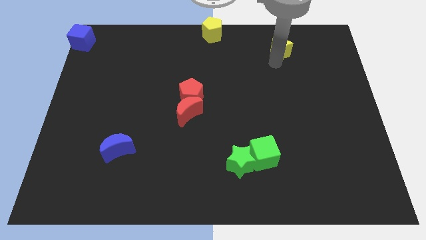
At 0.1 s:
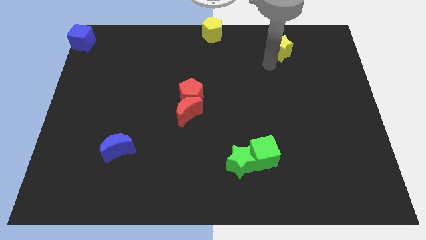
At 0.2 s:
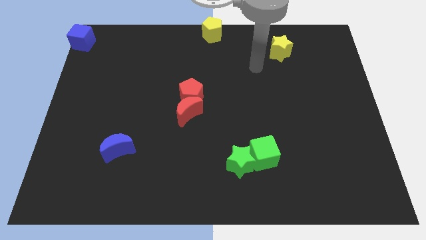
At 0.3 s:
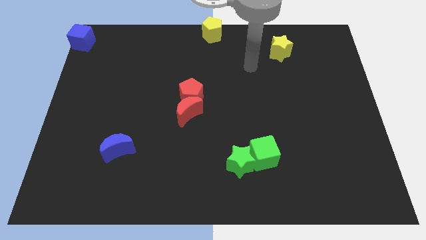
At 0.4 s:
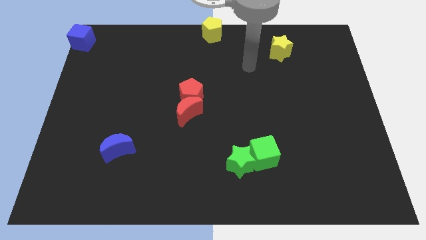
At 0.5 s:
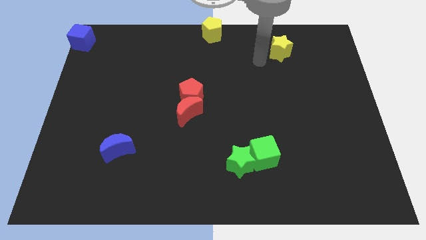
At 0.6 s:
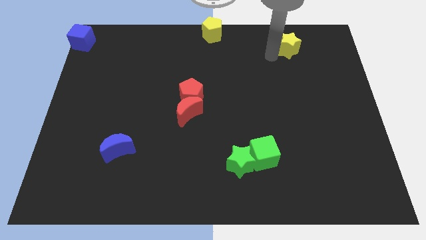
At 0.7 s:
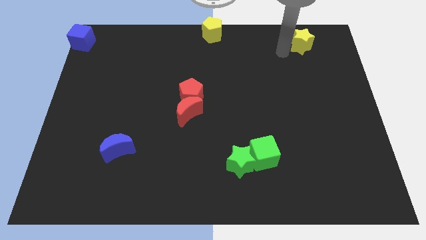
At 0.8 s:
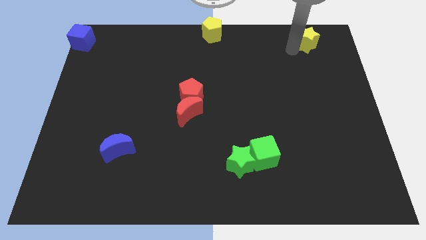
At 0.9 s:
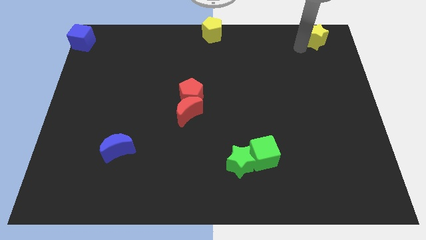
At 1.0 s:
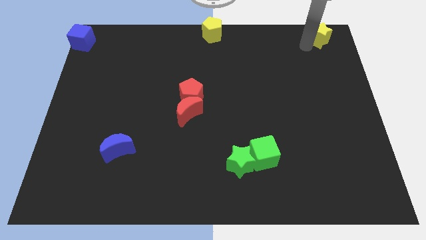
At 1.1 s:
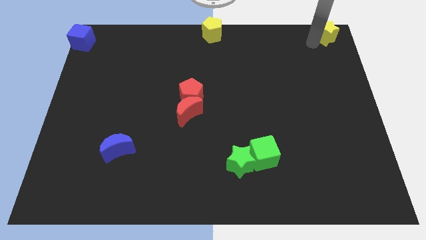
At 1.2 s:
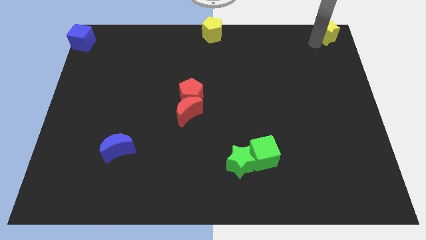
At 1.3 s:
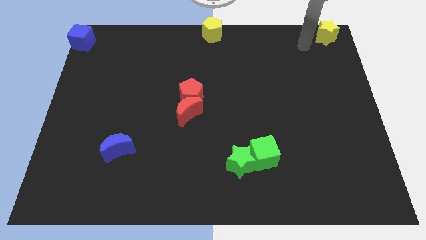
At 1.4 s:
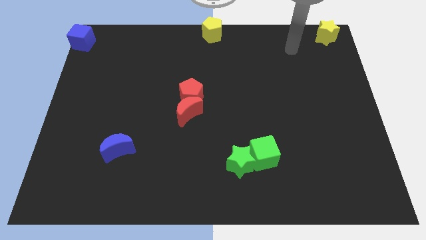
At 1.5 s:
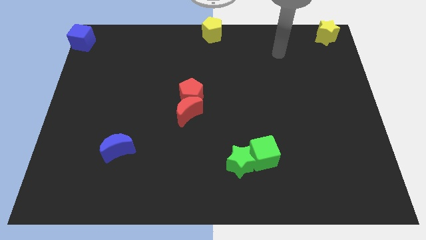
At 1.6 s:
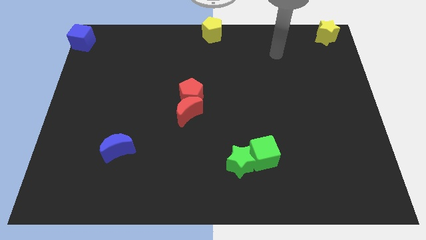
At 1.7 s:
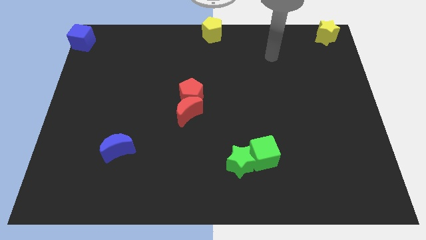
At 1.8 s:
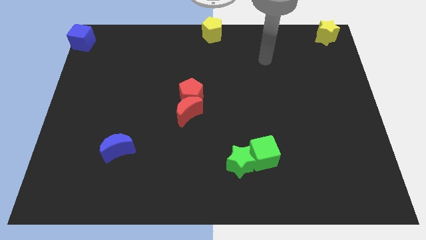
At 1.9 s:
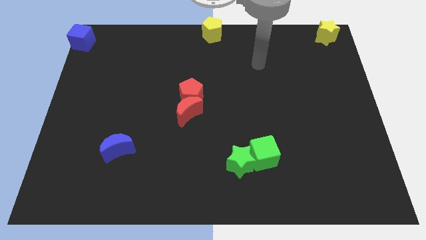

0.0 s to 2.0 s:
put the yellow star at the top right corner

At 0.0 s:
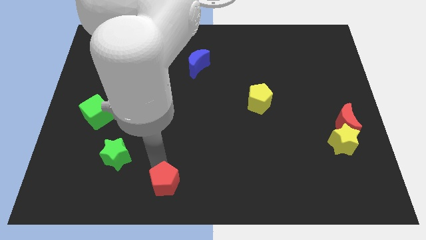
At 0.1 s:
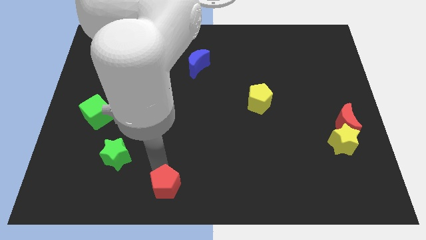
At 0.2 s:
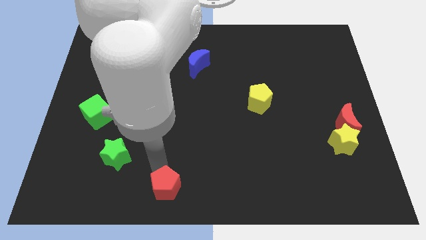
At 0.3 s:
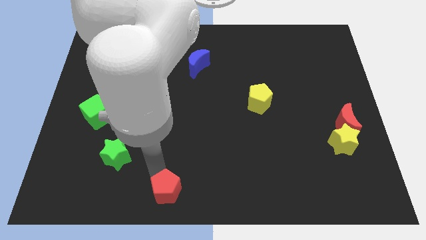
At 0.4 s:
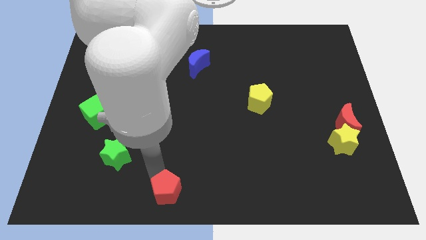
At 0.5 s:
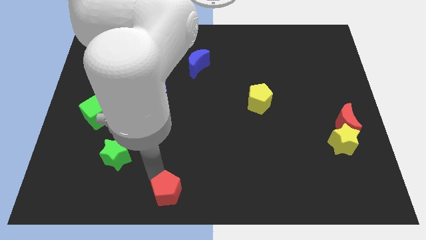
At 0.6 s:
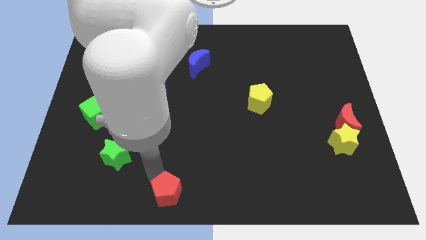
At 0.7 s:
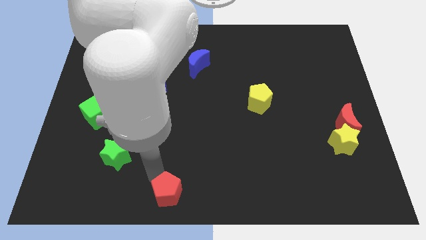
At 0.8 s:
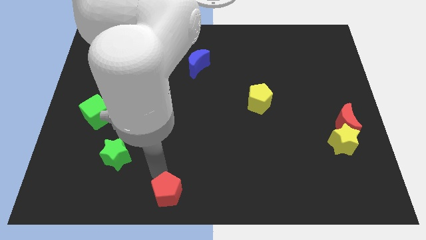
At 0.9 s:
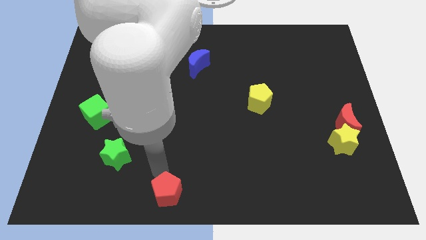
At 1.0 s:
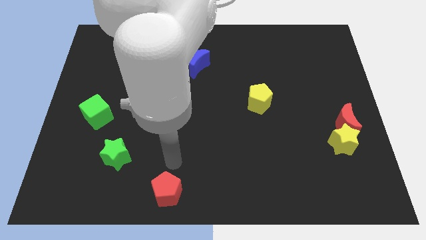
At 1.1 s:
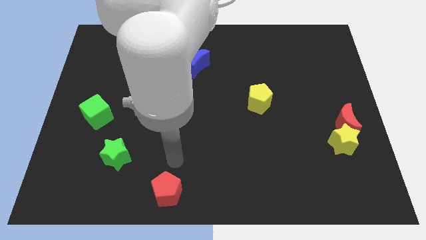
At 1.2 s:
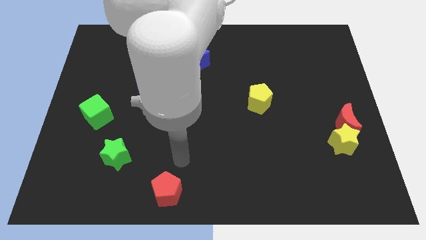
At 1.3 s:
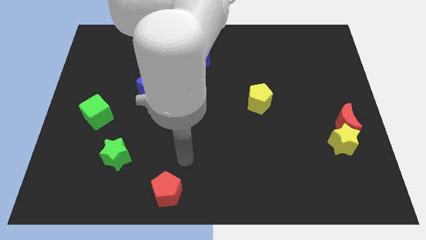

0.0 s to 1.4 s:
move the red pentagon to the bottom center of the board

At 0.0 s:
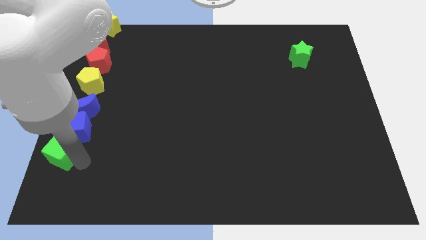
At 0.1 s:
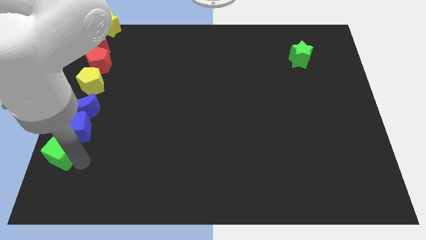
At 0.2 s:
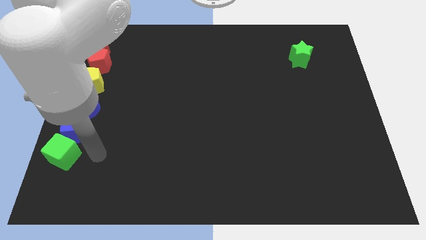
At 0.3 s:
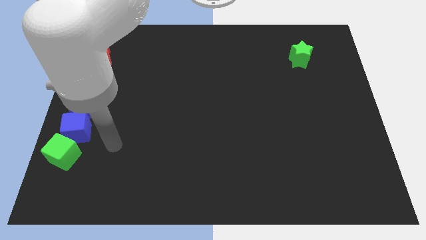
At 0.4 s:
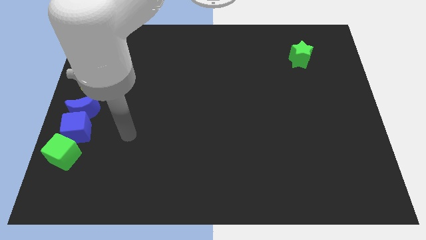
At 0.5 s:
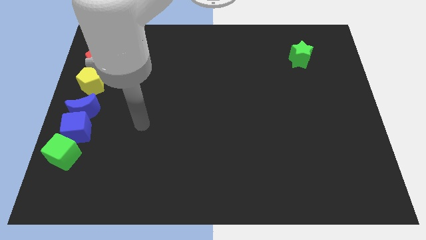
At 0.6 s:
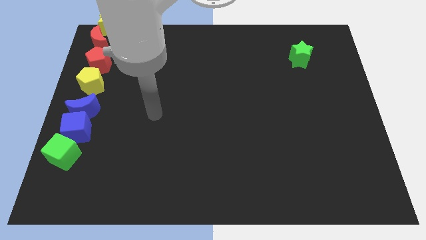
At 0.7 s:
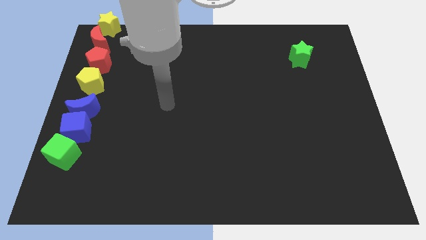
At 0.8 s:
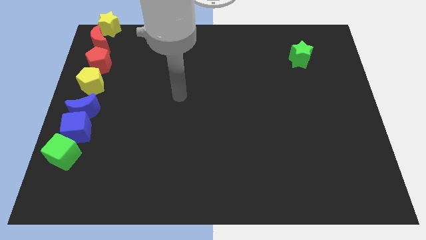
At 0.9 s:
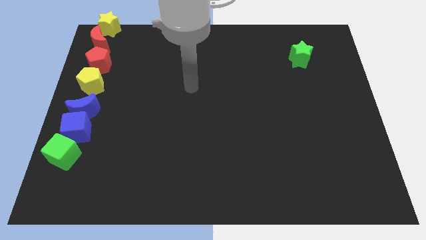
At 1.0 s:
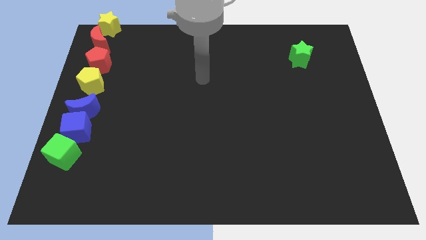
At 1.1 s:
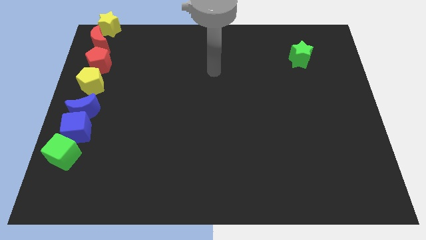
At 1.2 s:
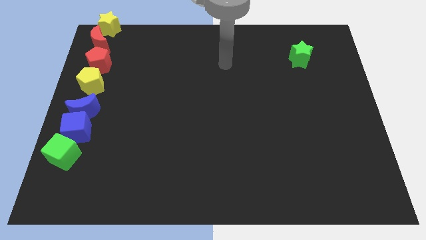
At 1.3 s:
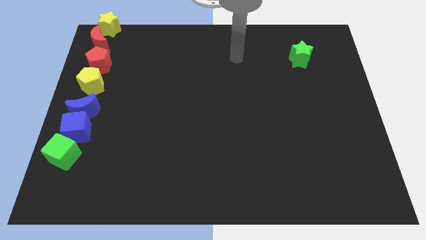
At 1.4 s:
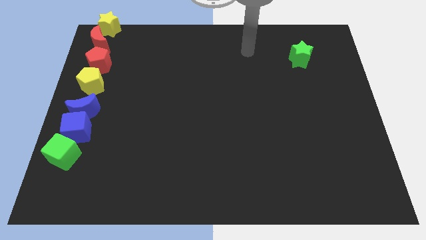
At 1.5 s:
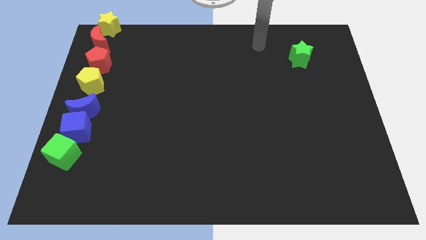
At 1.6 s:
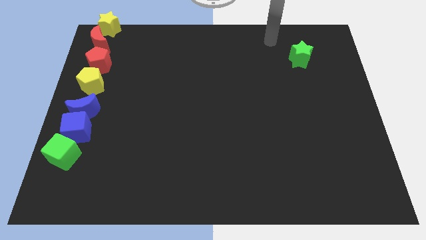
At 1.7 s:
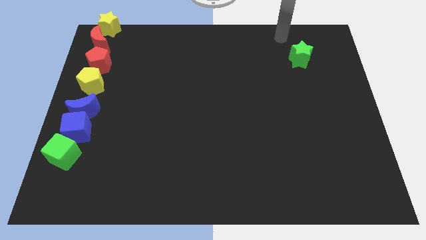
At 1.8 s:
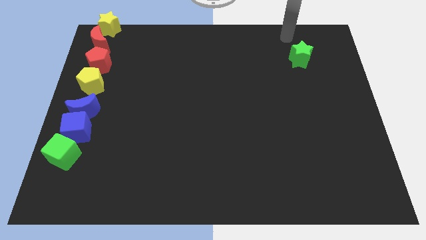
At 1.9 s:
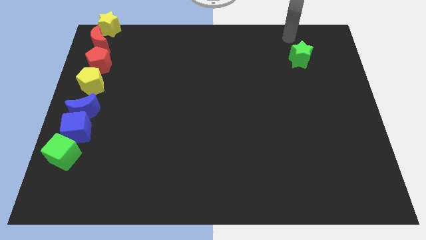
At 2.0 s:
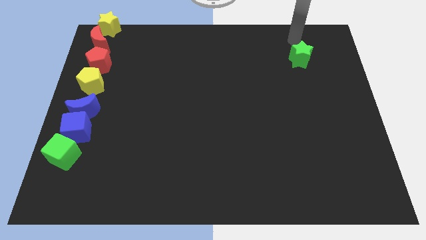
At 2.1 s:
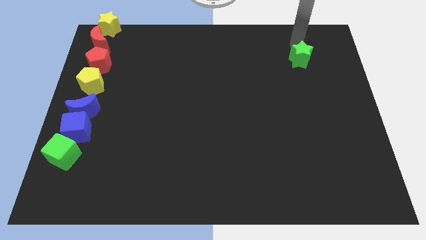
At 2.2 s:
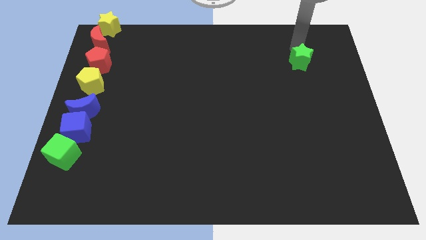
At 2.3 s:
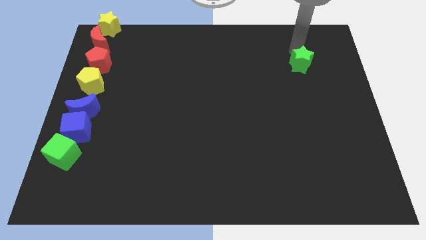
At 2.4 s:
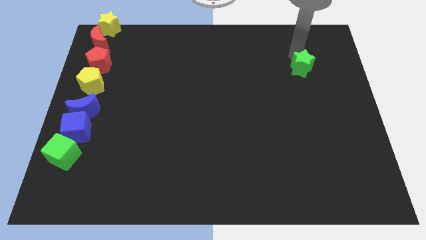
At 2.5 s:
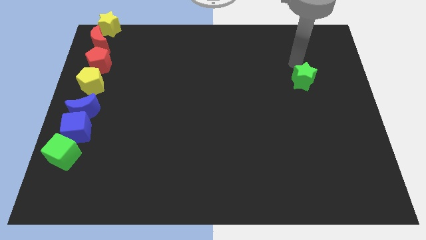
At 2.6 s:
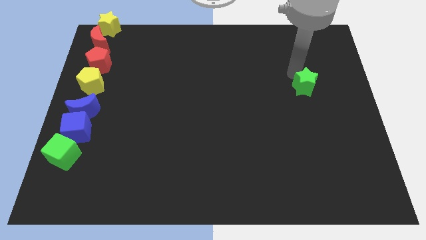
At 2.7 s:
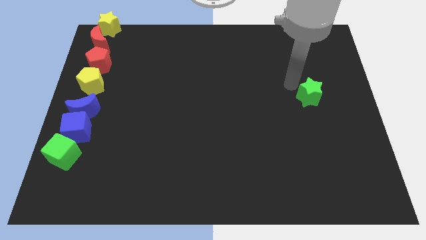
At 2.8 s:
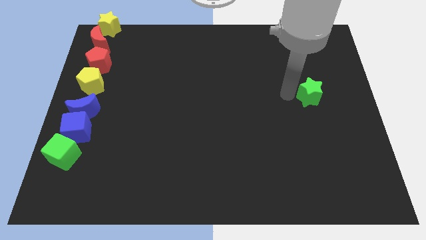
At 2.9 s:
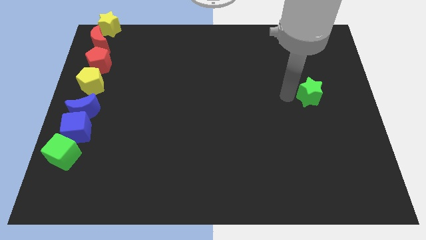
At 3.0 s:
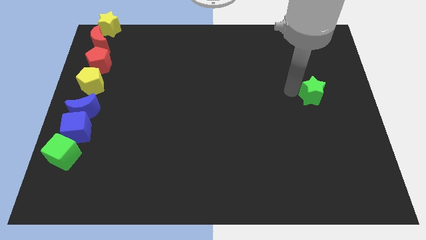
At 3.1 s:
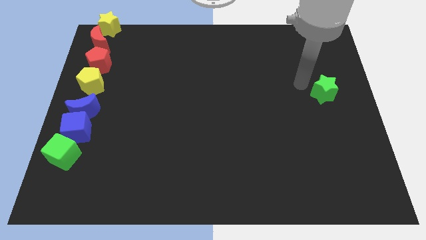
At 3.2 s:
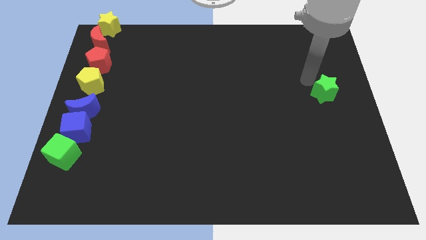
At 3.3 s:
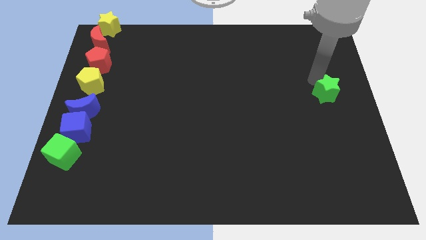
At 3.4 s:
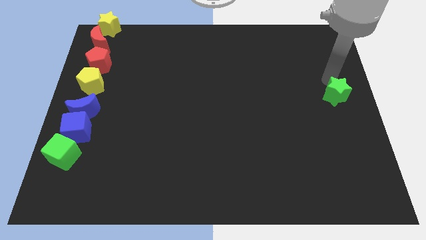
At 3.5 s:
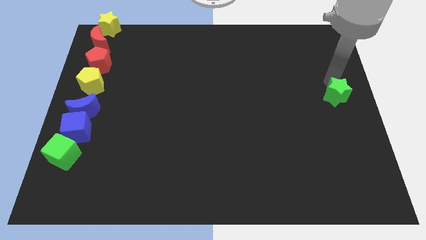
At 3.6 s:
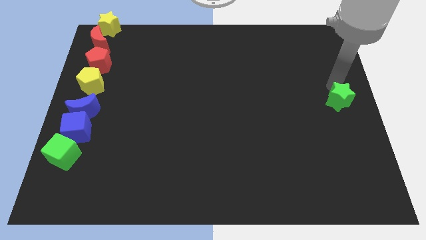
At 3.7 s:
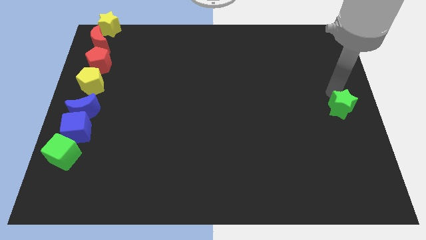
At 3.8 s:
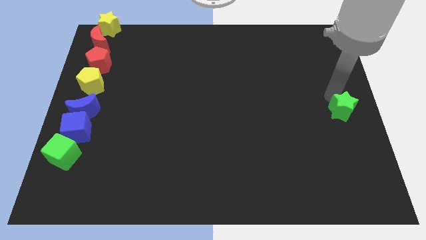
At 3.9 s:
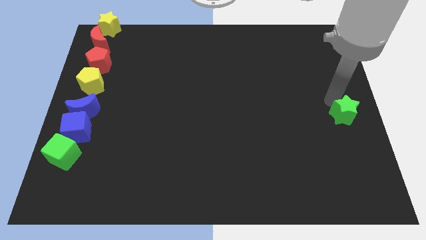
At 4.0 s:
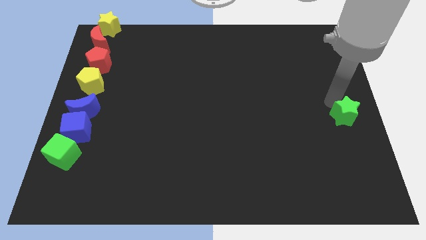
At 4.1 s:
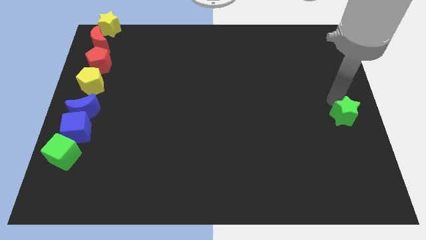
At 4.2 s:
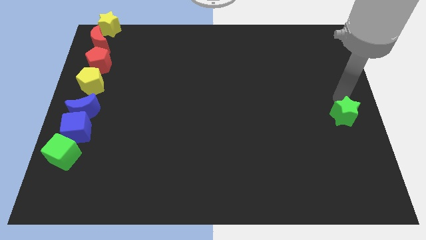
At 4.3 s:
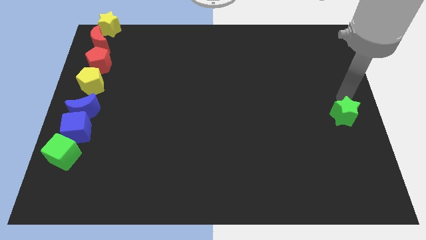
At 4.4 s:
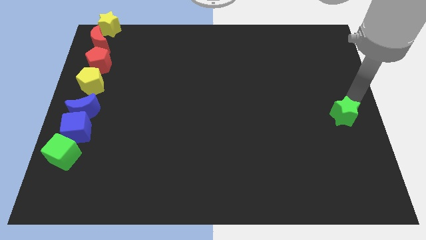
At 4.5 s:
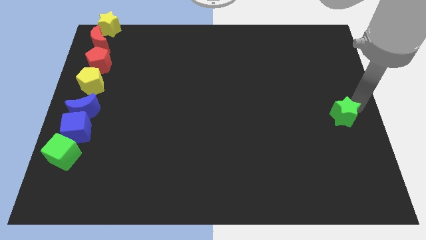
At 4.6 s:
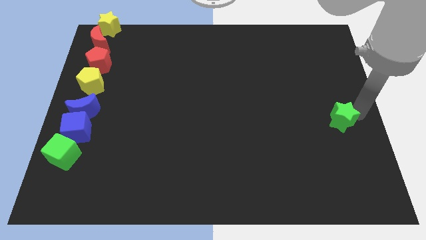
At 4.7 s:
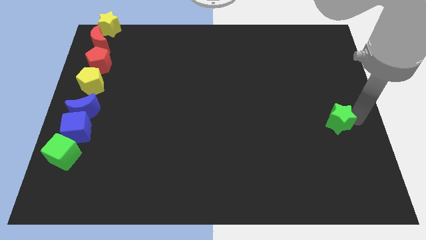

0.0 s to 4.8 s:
put the green star to right of the blue cube

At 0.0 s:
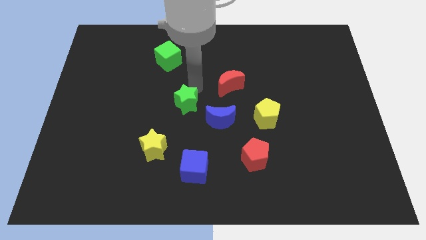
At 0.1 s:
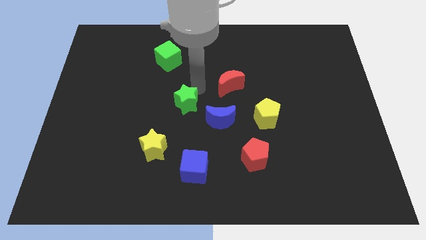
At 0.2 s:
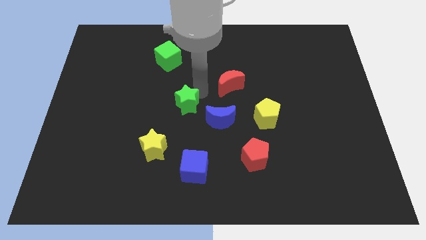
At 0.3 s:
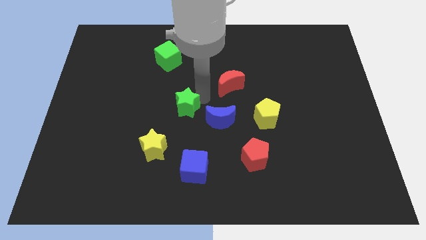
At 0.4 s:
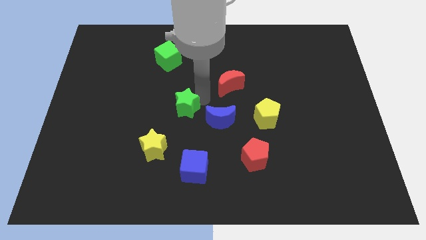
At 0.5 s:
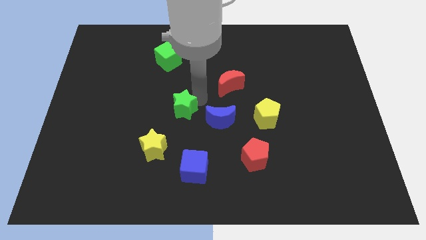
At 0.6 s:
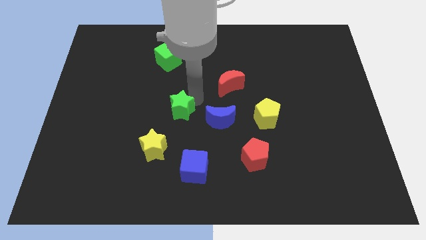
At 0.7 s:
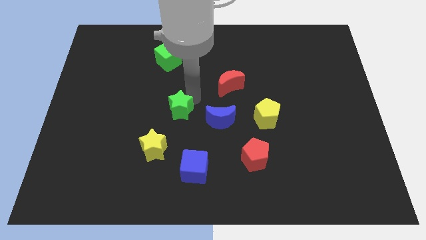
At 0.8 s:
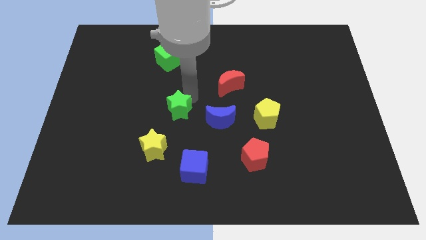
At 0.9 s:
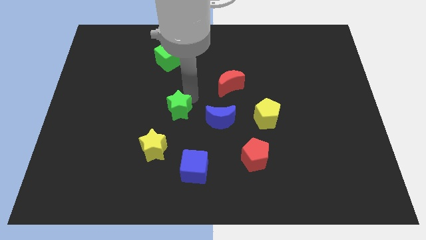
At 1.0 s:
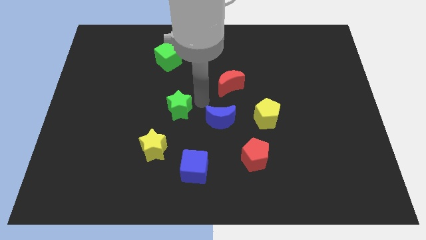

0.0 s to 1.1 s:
push the green star towards the diagonal top right of the yellow star
